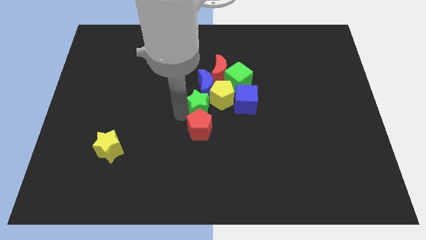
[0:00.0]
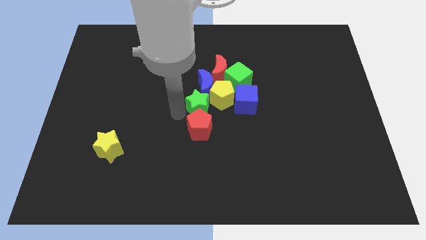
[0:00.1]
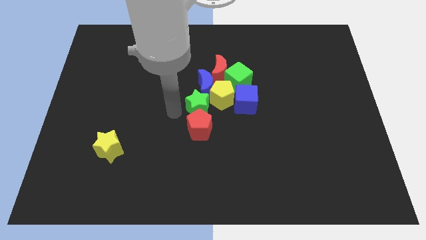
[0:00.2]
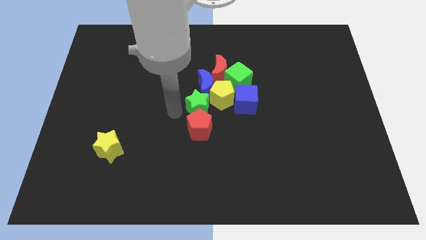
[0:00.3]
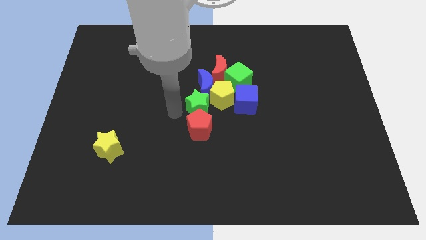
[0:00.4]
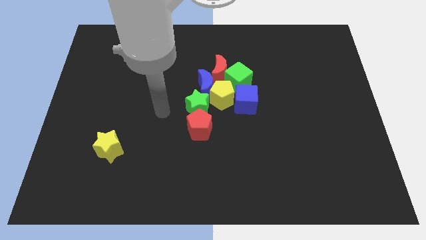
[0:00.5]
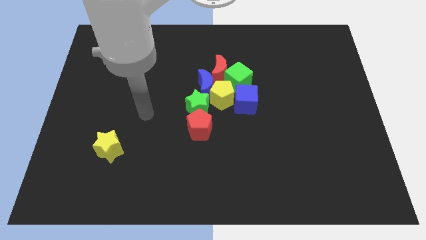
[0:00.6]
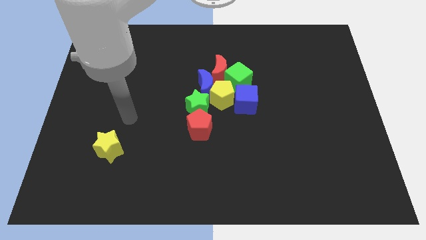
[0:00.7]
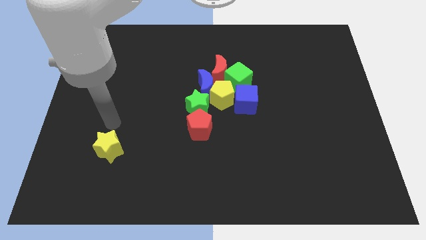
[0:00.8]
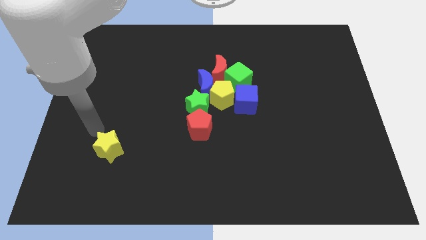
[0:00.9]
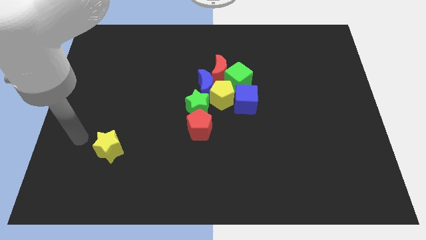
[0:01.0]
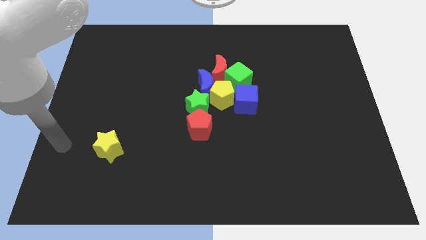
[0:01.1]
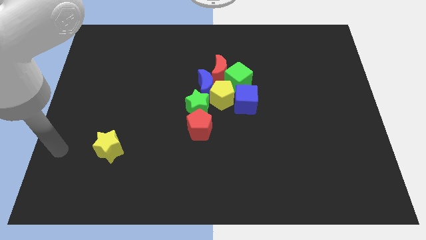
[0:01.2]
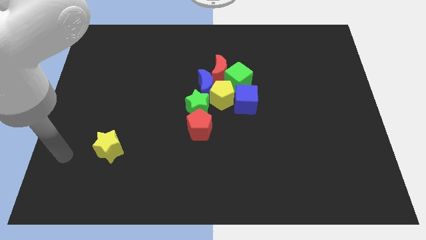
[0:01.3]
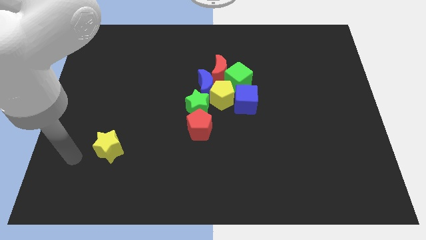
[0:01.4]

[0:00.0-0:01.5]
move away from the green star

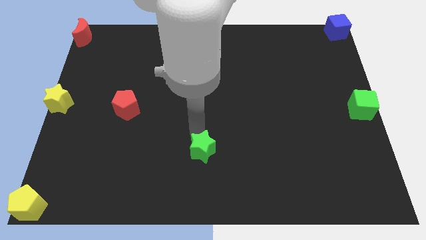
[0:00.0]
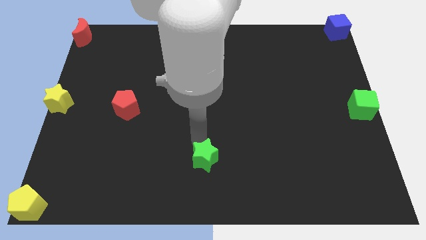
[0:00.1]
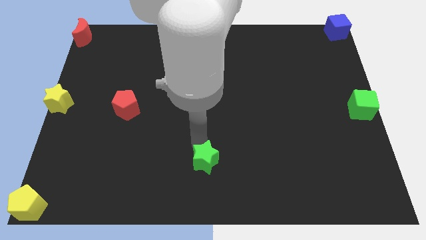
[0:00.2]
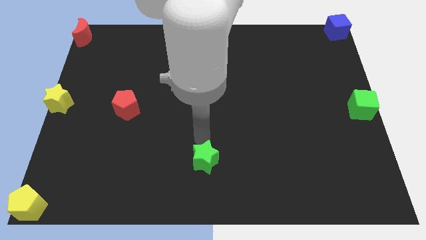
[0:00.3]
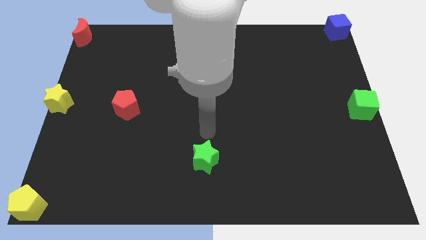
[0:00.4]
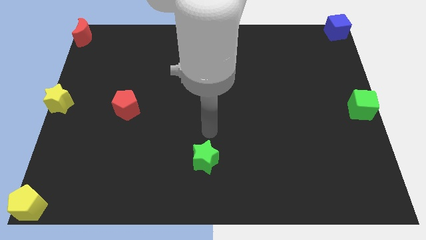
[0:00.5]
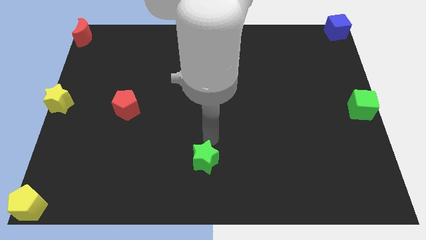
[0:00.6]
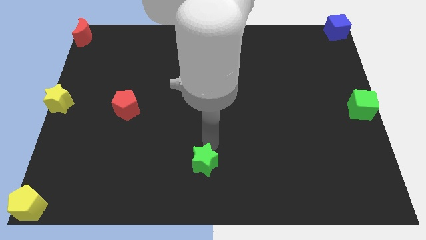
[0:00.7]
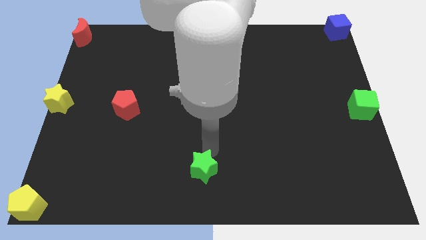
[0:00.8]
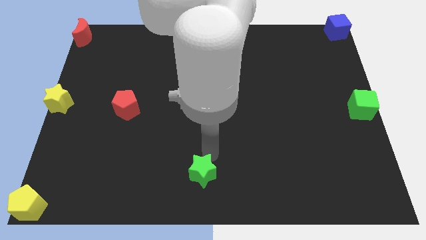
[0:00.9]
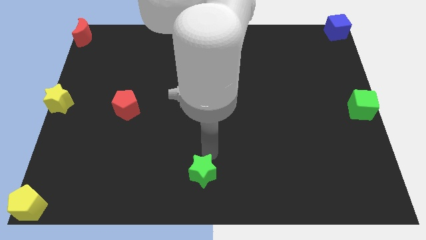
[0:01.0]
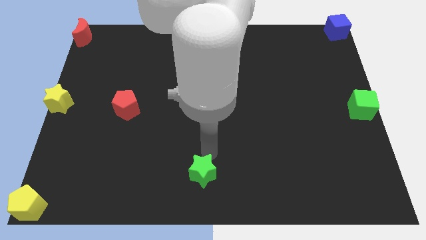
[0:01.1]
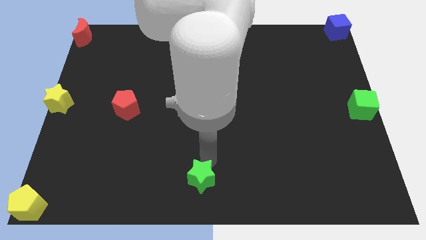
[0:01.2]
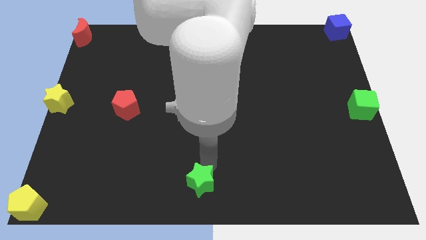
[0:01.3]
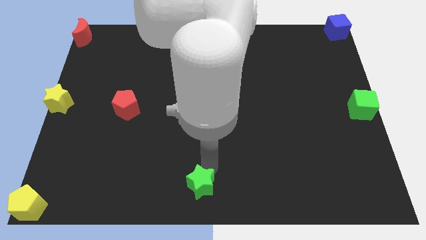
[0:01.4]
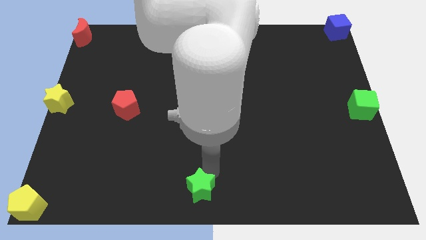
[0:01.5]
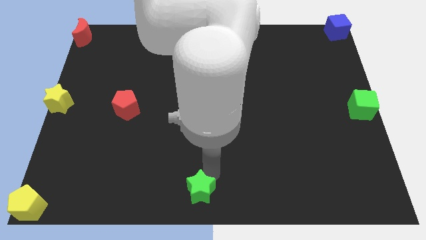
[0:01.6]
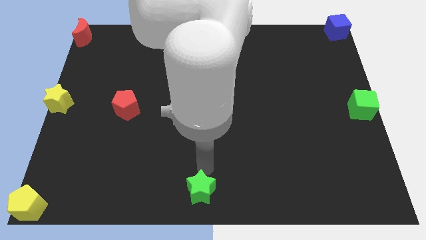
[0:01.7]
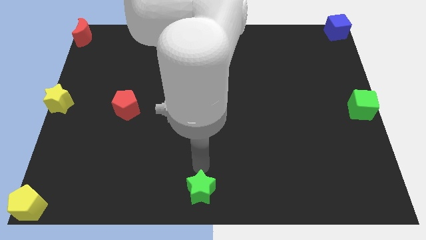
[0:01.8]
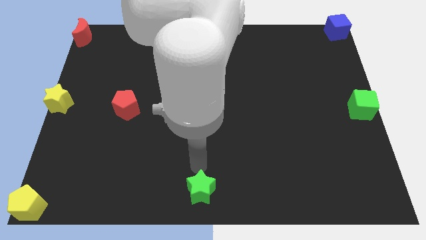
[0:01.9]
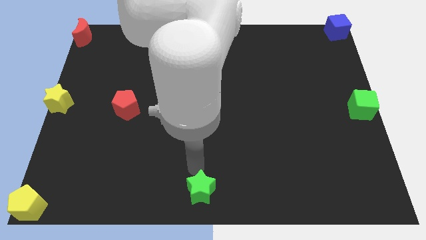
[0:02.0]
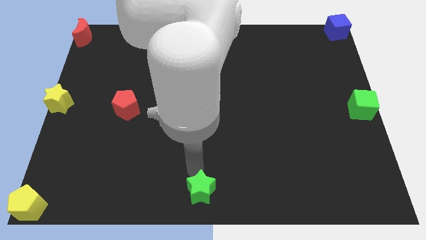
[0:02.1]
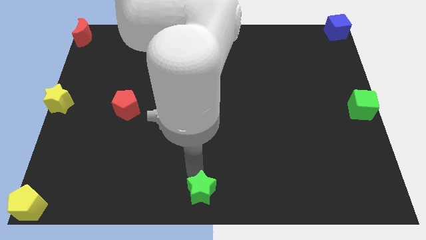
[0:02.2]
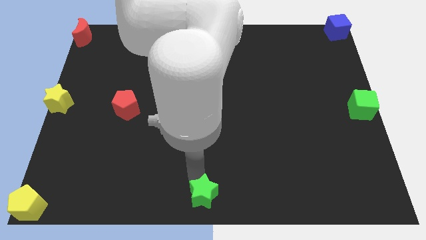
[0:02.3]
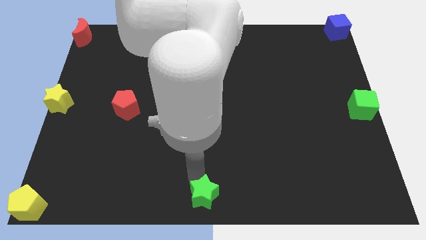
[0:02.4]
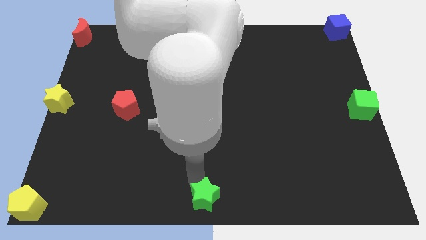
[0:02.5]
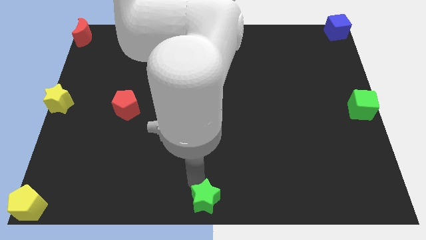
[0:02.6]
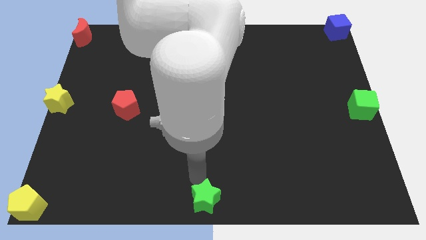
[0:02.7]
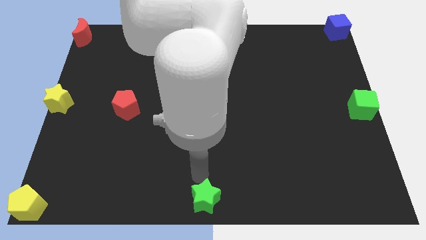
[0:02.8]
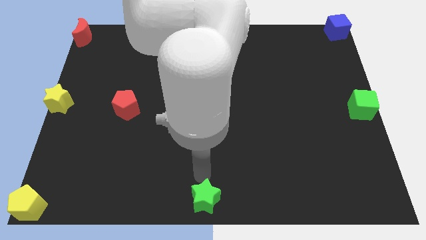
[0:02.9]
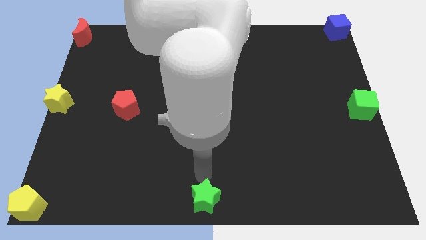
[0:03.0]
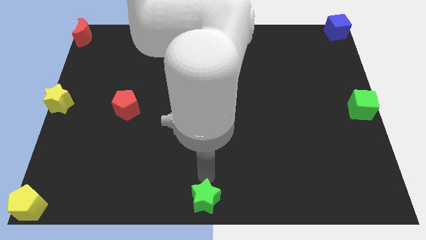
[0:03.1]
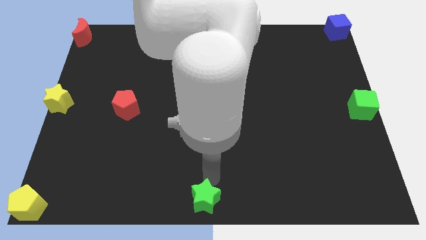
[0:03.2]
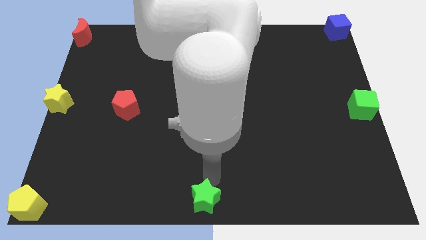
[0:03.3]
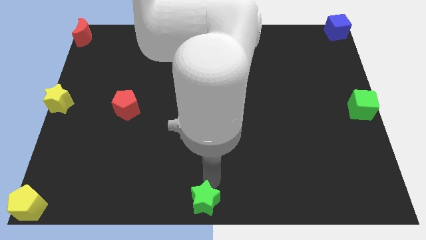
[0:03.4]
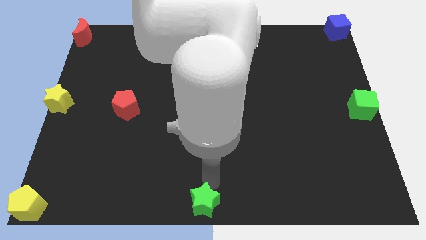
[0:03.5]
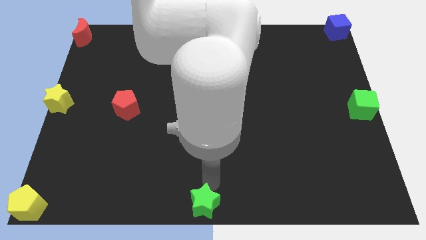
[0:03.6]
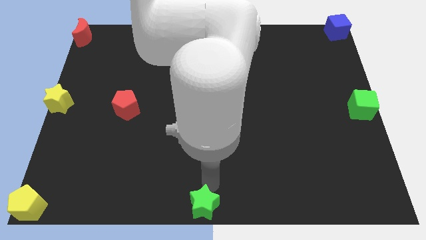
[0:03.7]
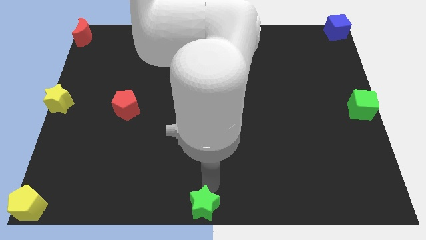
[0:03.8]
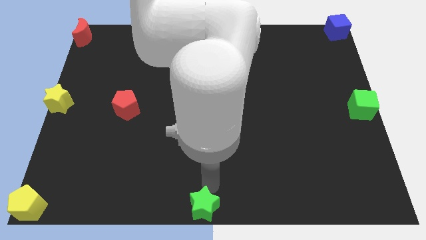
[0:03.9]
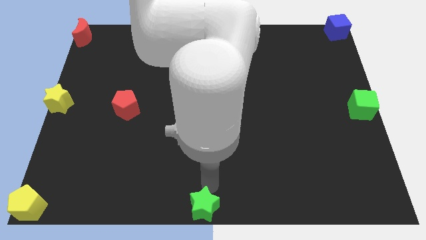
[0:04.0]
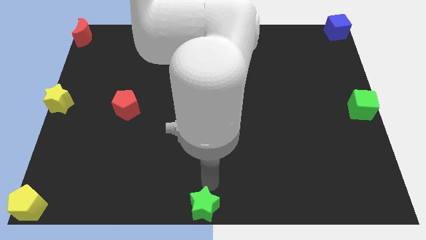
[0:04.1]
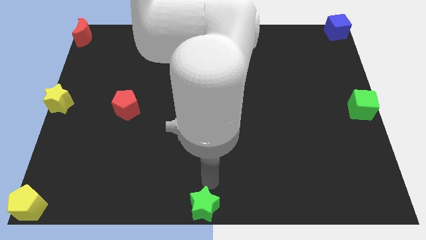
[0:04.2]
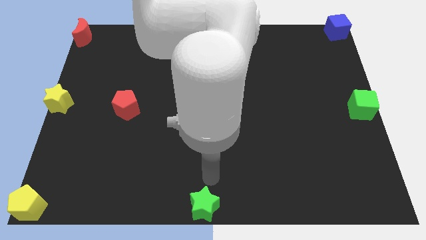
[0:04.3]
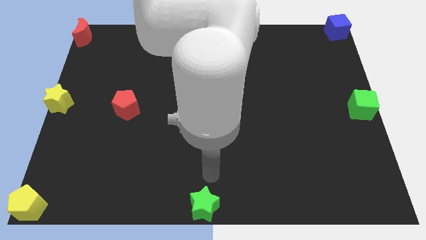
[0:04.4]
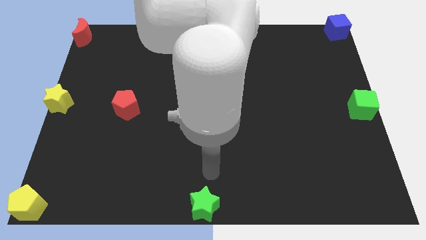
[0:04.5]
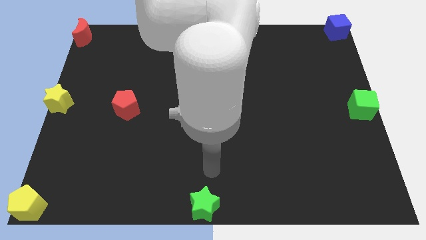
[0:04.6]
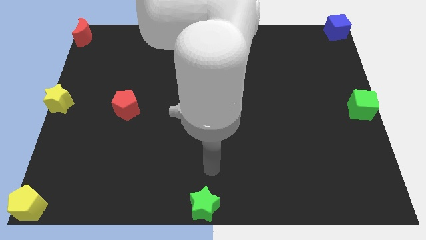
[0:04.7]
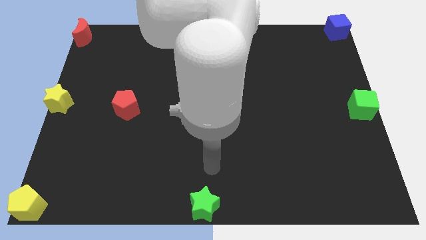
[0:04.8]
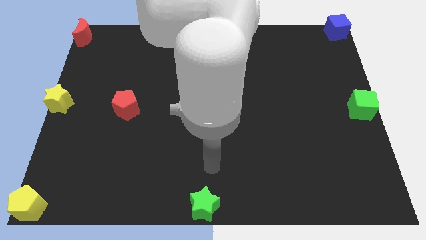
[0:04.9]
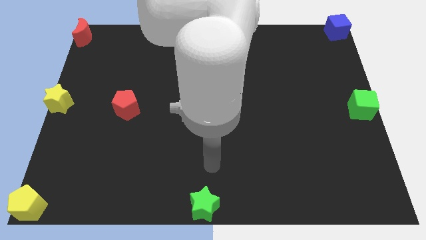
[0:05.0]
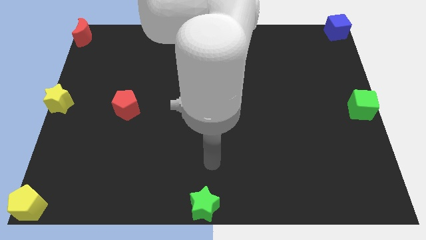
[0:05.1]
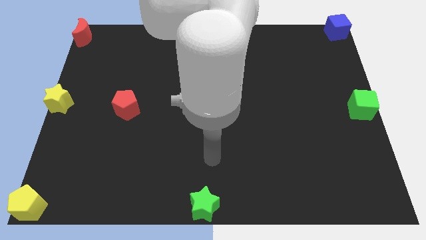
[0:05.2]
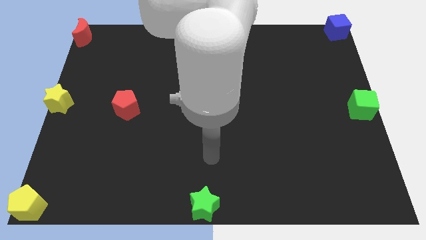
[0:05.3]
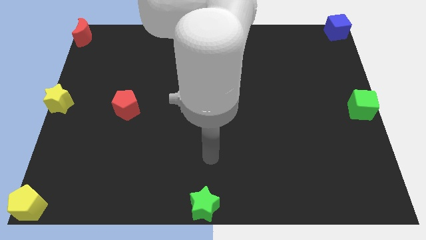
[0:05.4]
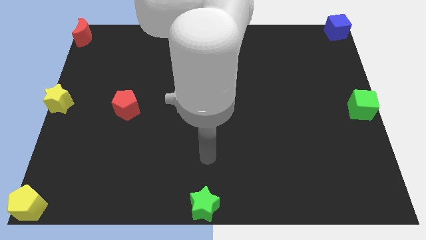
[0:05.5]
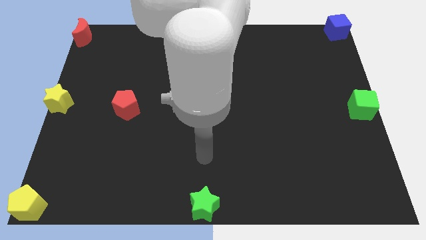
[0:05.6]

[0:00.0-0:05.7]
push the green star to the bottom center of the board

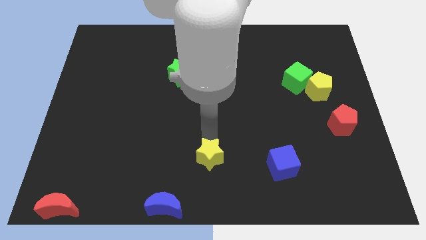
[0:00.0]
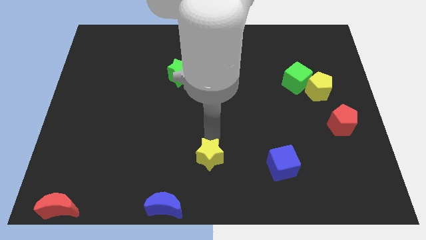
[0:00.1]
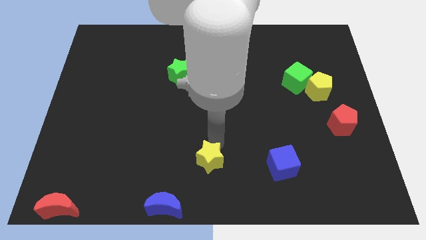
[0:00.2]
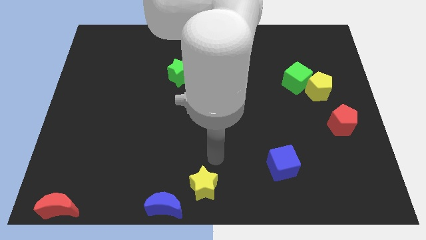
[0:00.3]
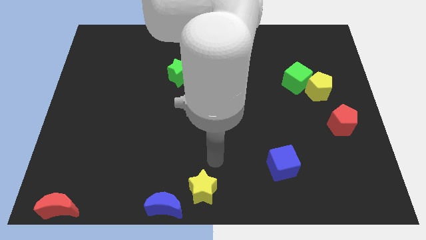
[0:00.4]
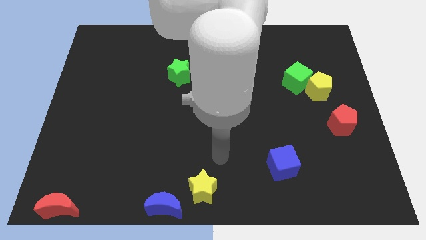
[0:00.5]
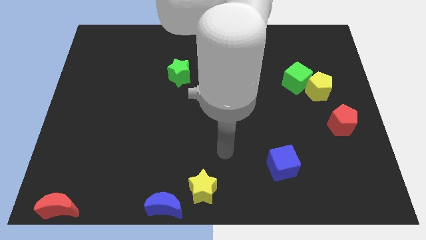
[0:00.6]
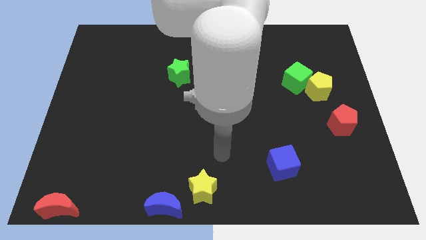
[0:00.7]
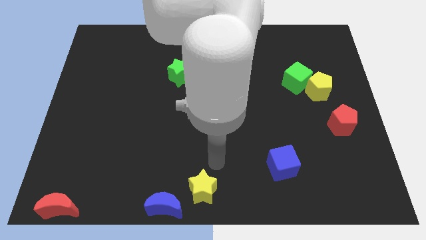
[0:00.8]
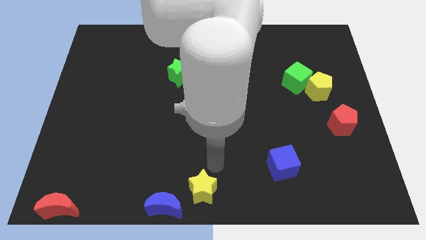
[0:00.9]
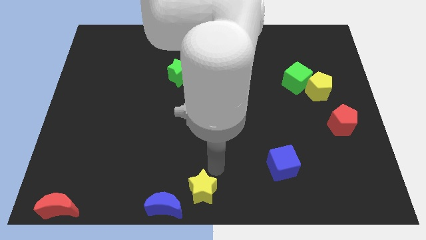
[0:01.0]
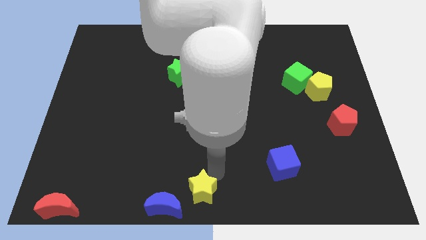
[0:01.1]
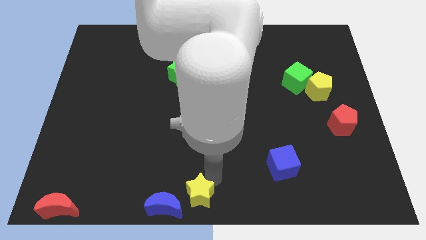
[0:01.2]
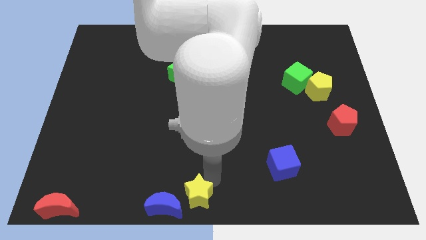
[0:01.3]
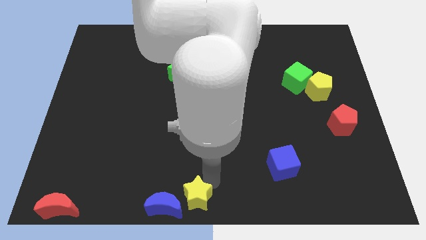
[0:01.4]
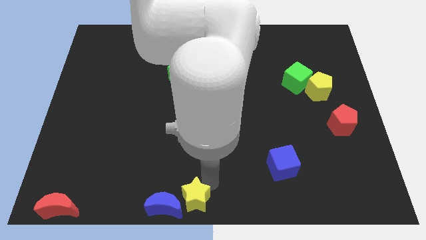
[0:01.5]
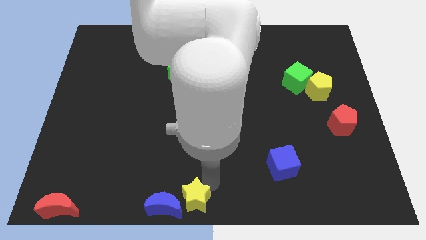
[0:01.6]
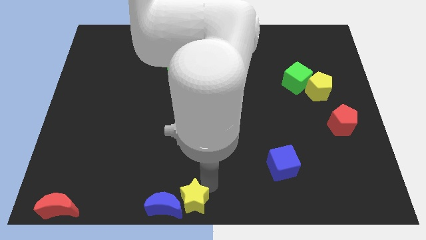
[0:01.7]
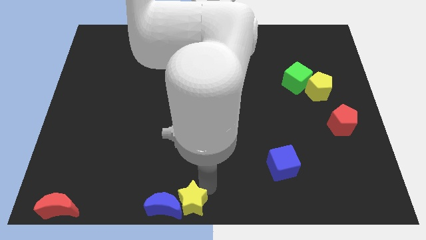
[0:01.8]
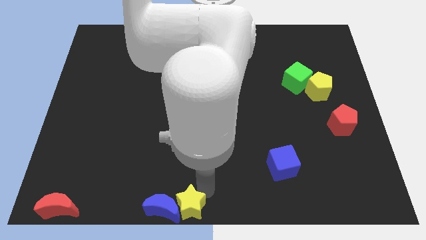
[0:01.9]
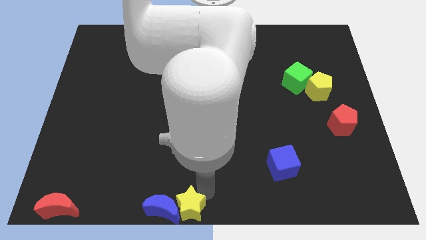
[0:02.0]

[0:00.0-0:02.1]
move the yellow star close to the blue moon
